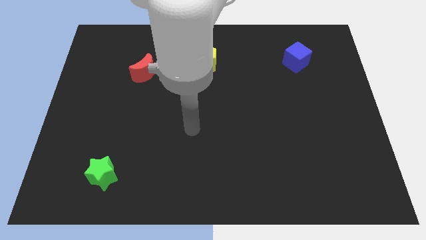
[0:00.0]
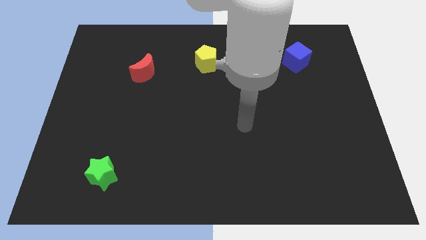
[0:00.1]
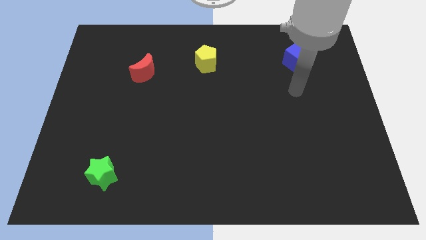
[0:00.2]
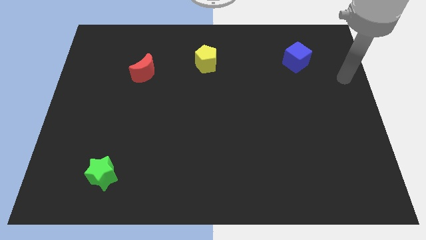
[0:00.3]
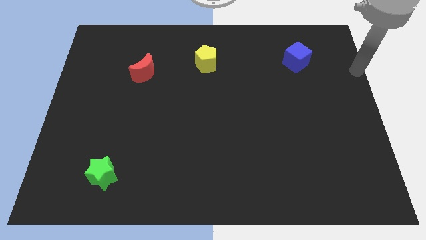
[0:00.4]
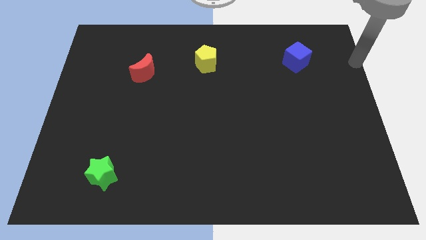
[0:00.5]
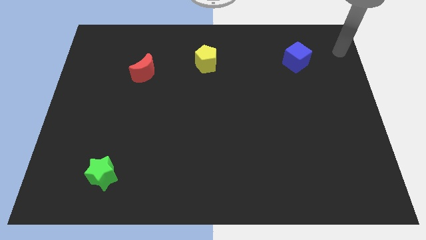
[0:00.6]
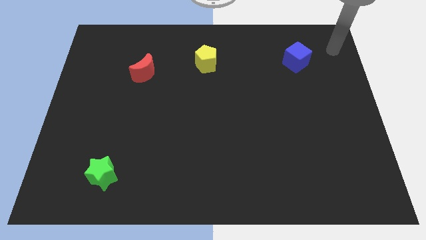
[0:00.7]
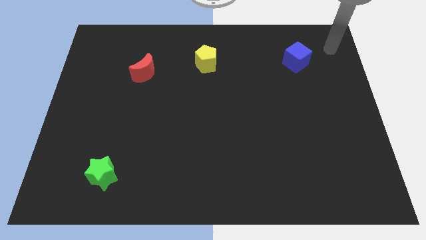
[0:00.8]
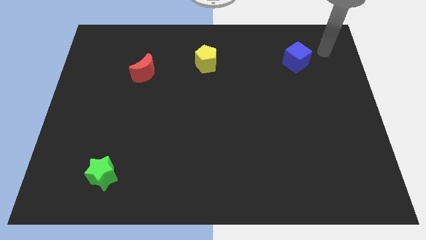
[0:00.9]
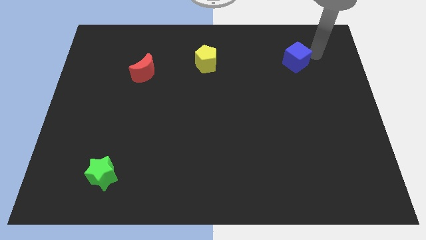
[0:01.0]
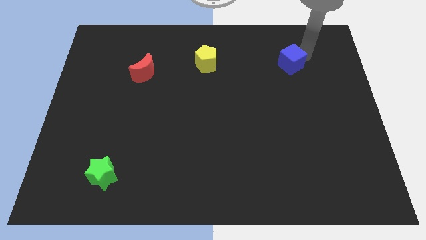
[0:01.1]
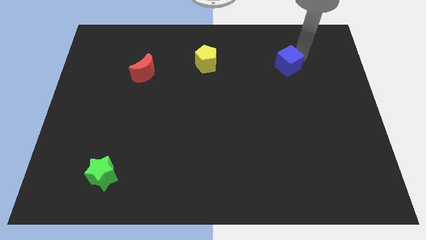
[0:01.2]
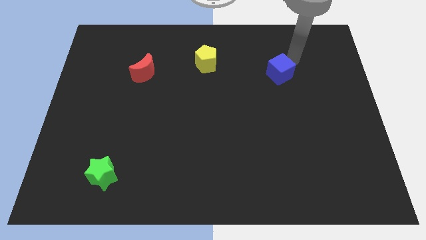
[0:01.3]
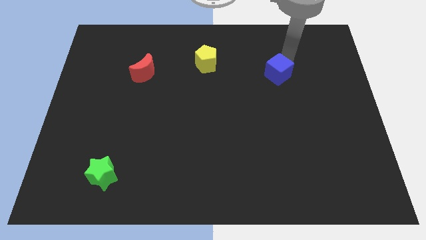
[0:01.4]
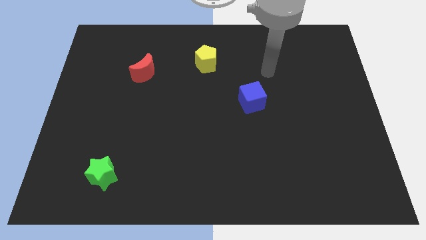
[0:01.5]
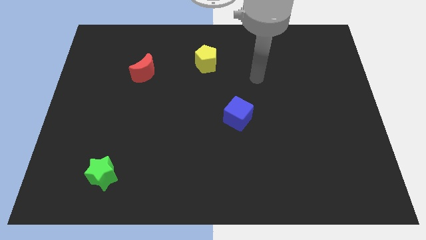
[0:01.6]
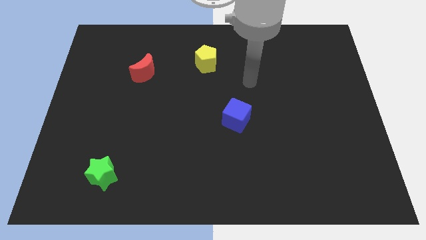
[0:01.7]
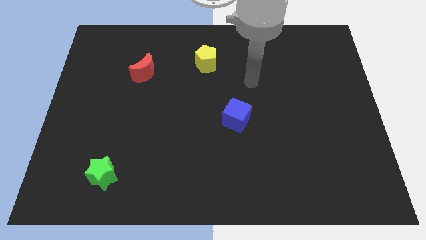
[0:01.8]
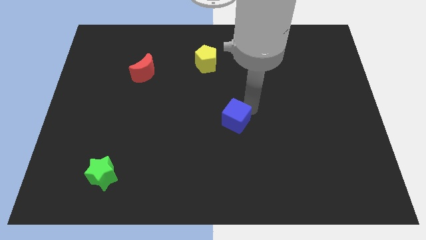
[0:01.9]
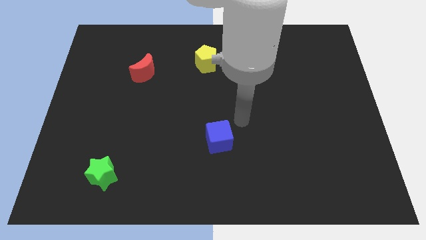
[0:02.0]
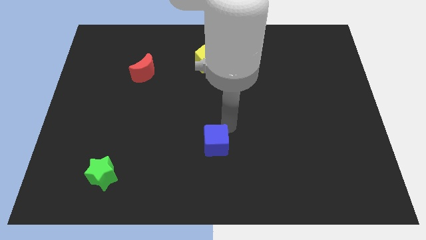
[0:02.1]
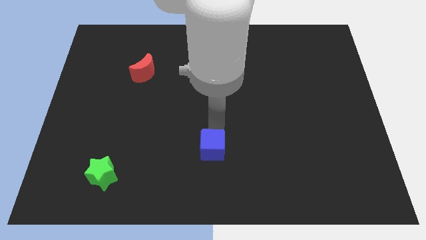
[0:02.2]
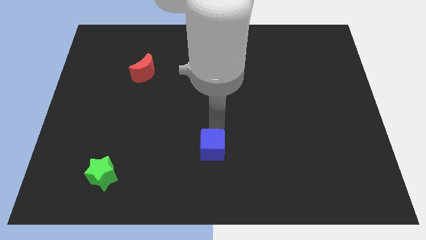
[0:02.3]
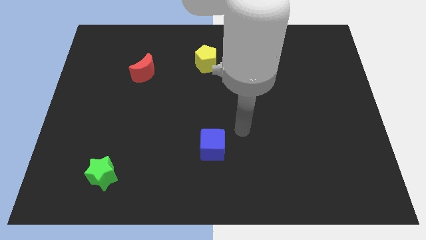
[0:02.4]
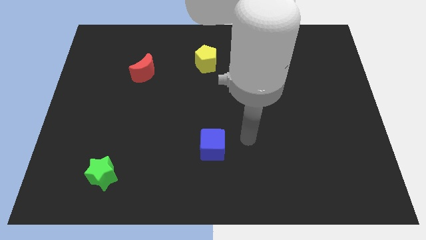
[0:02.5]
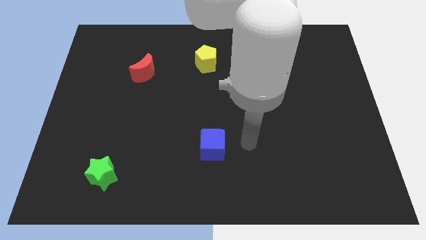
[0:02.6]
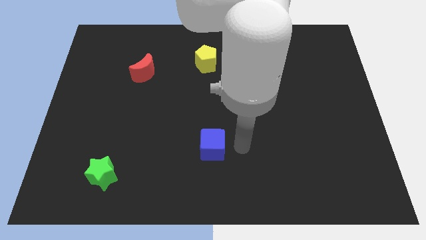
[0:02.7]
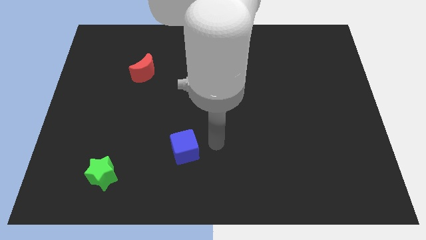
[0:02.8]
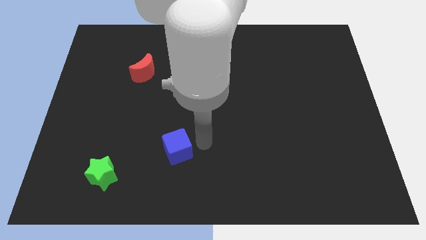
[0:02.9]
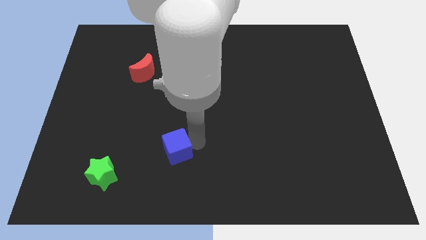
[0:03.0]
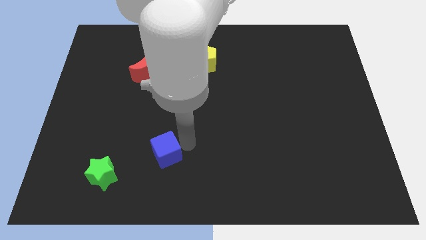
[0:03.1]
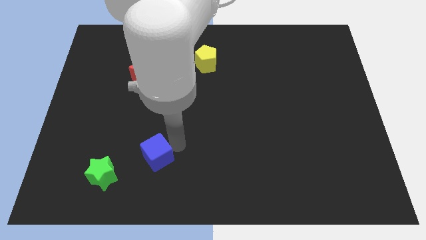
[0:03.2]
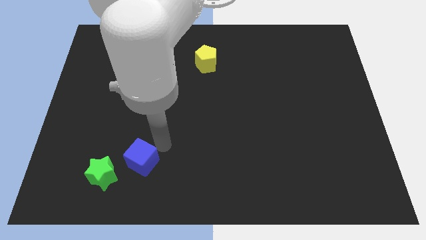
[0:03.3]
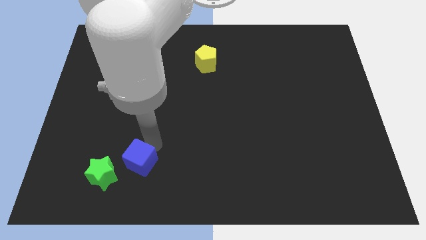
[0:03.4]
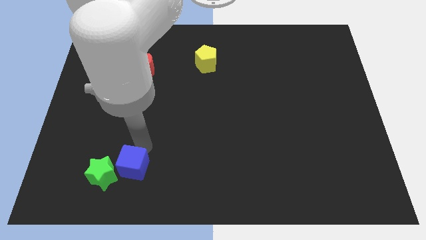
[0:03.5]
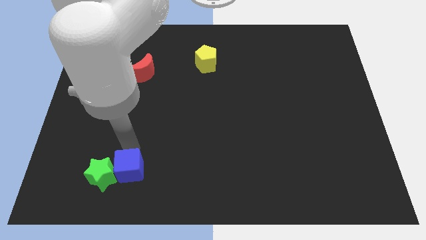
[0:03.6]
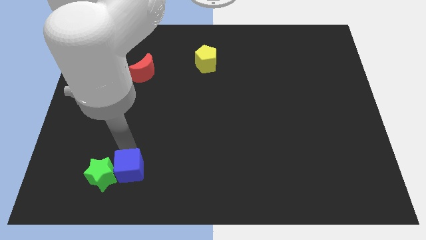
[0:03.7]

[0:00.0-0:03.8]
slide the blue cube close to the green star

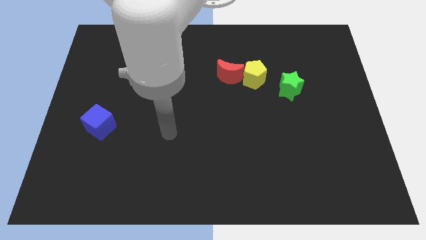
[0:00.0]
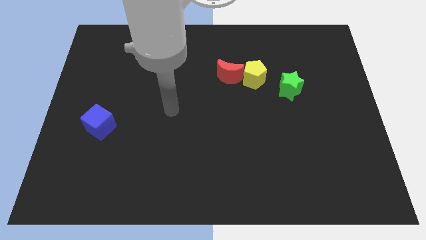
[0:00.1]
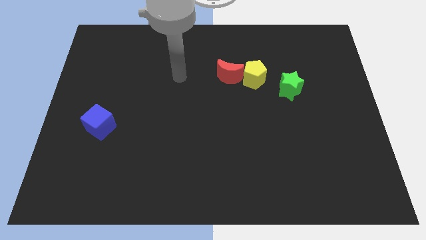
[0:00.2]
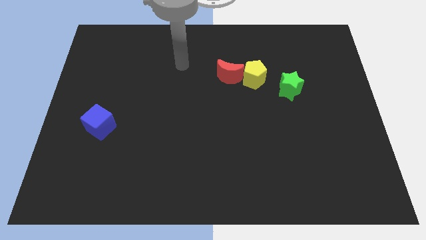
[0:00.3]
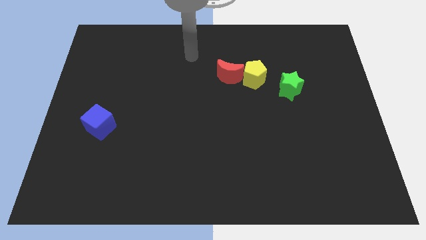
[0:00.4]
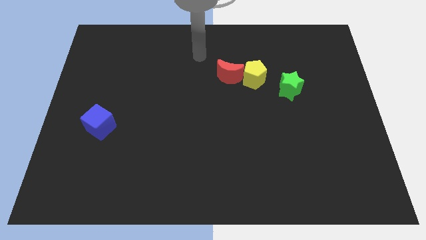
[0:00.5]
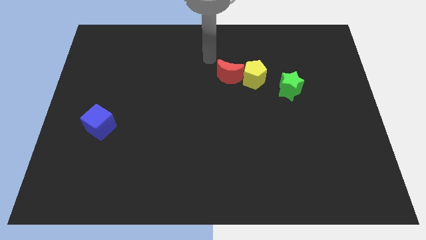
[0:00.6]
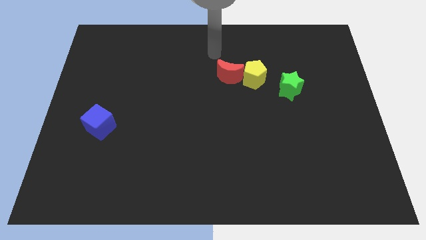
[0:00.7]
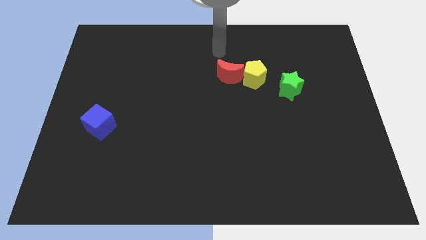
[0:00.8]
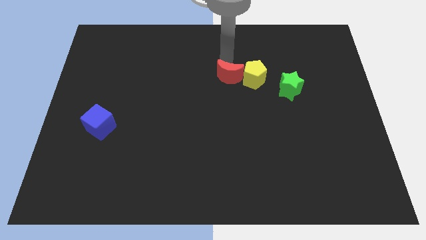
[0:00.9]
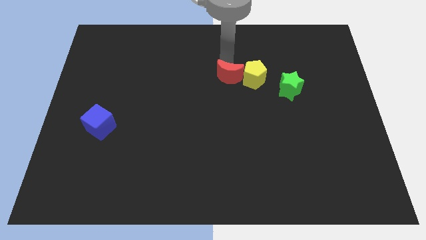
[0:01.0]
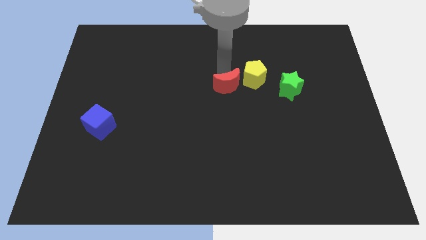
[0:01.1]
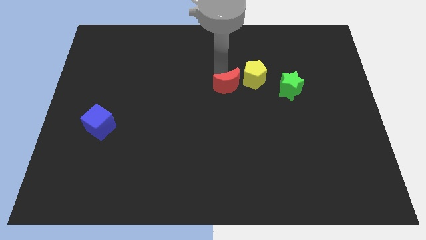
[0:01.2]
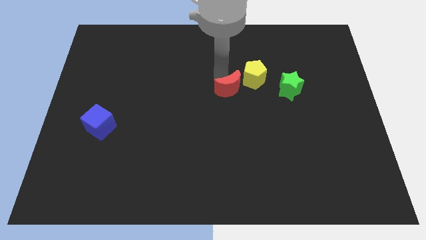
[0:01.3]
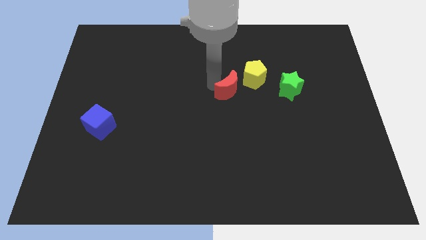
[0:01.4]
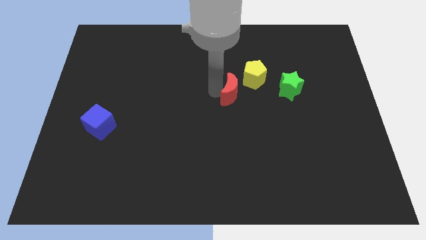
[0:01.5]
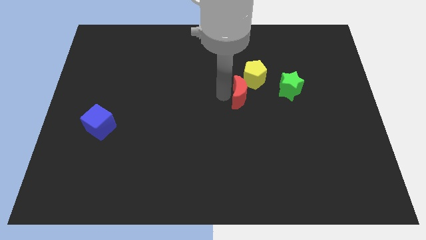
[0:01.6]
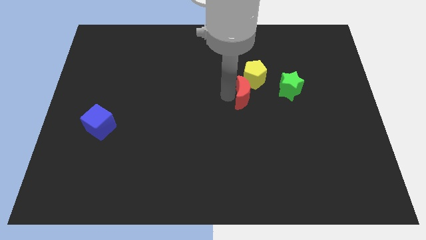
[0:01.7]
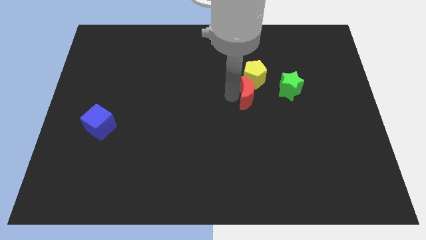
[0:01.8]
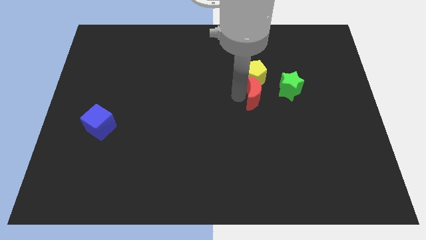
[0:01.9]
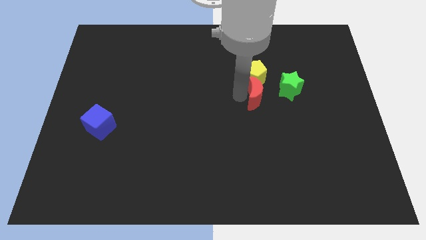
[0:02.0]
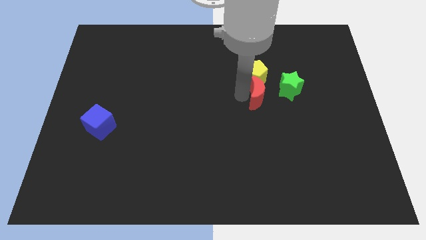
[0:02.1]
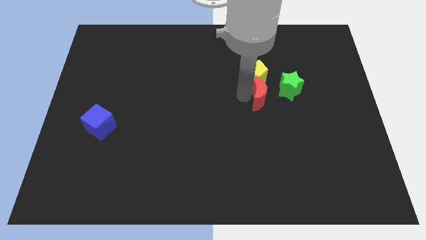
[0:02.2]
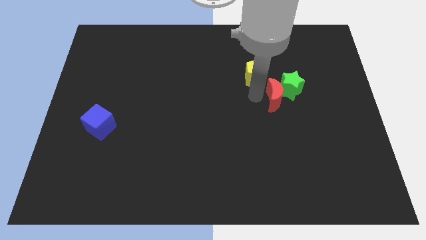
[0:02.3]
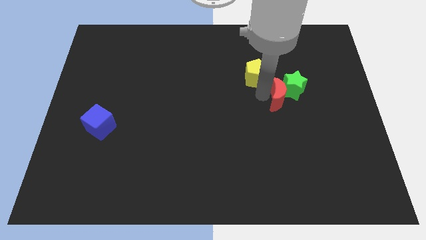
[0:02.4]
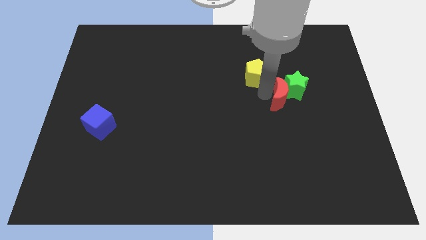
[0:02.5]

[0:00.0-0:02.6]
put the red moon to the green star

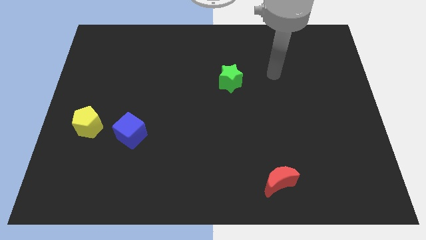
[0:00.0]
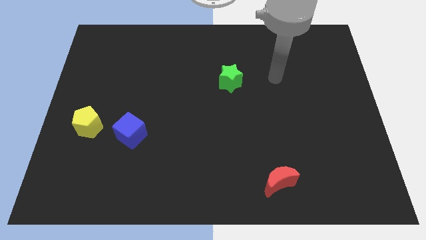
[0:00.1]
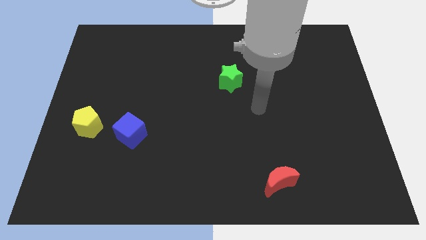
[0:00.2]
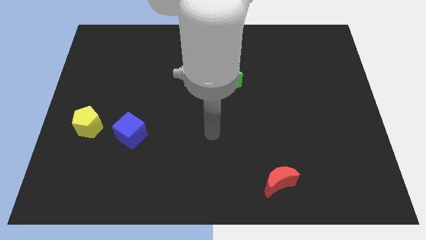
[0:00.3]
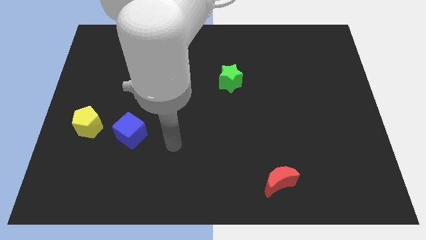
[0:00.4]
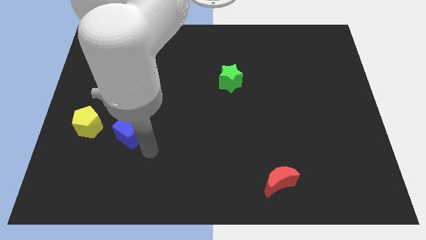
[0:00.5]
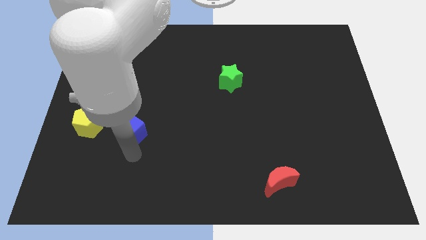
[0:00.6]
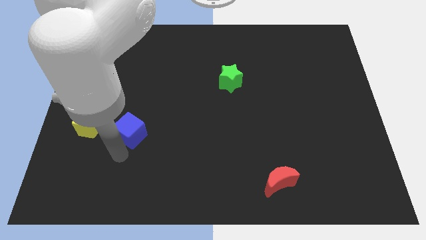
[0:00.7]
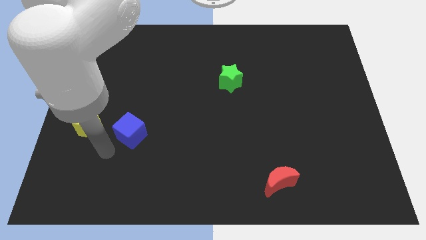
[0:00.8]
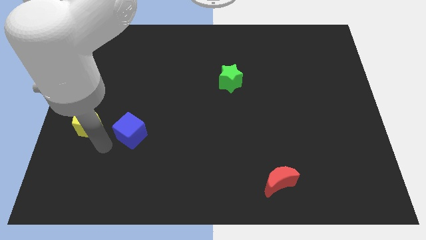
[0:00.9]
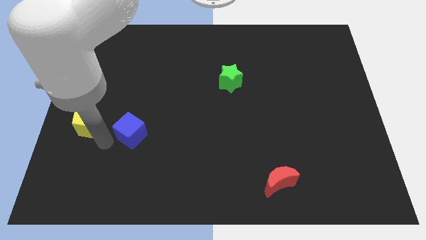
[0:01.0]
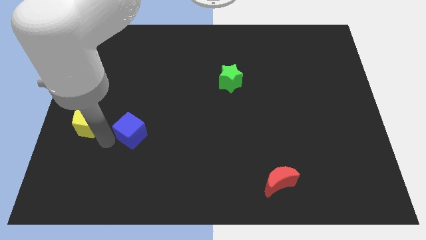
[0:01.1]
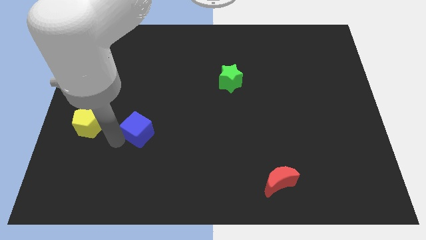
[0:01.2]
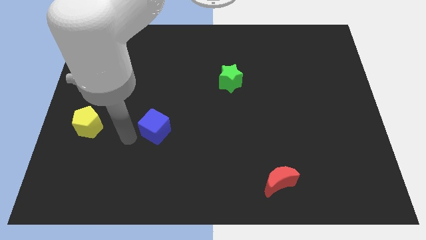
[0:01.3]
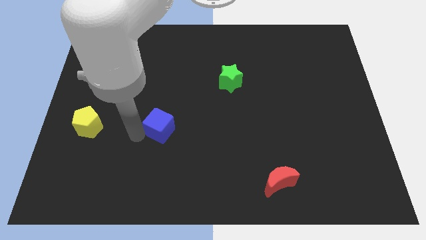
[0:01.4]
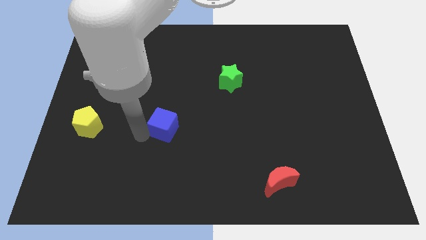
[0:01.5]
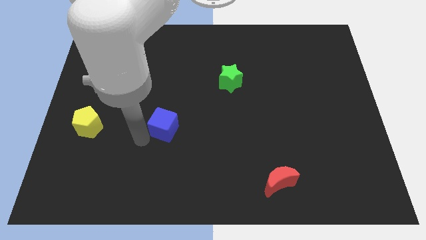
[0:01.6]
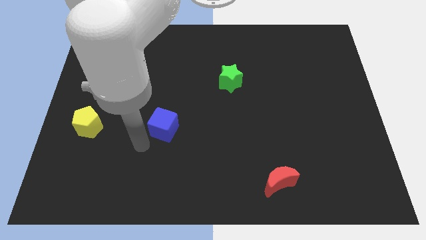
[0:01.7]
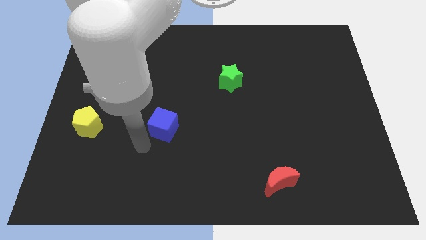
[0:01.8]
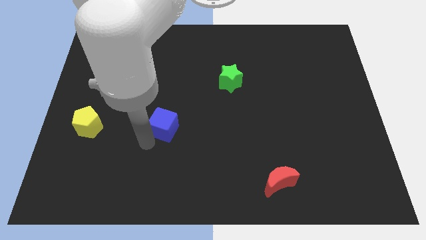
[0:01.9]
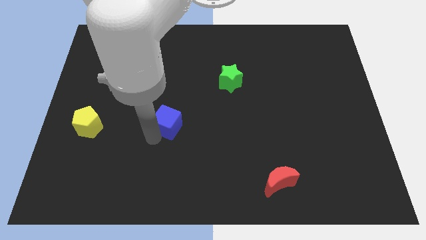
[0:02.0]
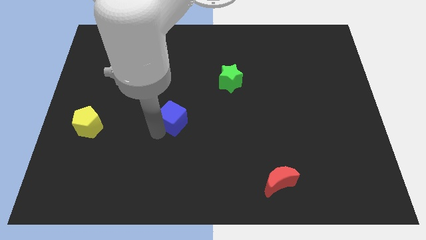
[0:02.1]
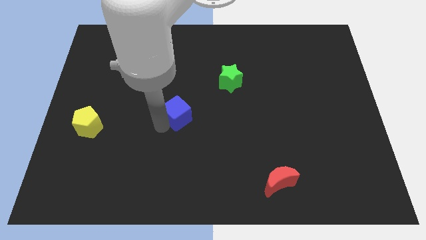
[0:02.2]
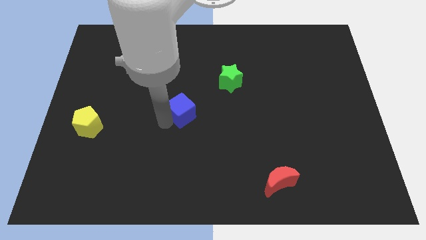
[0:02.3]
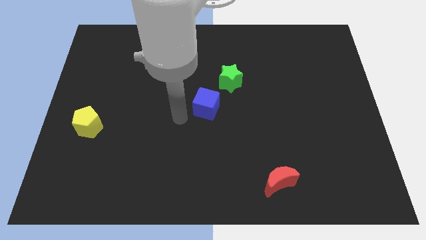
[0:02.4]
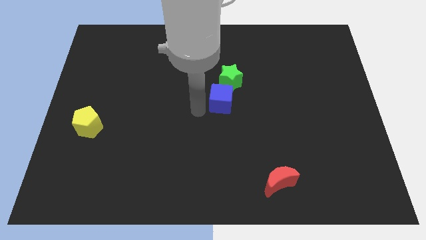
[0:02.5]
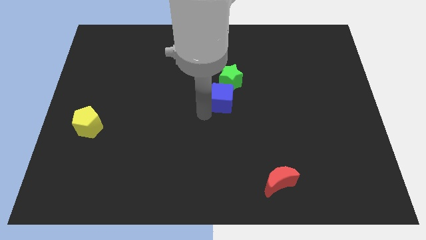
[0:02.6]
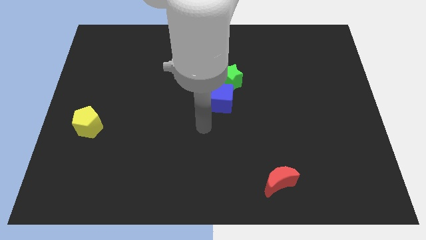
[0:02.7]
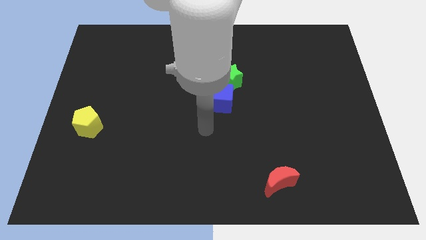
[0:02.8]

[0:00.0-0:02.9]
push the cube next to the star
